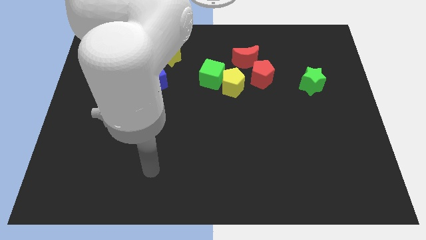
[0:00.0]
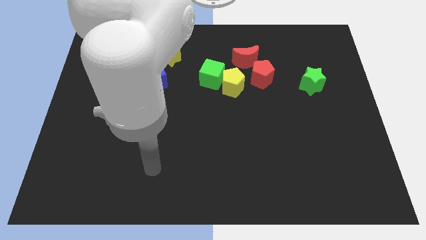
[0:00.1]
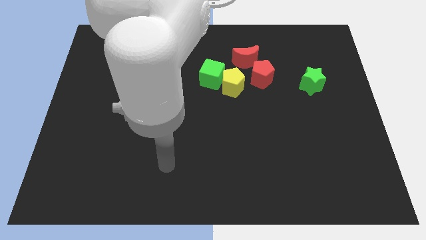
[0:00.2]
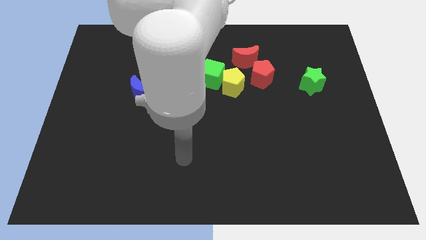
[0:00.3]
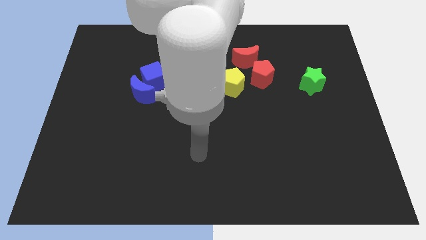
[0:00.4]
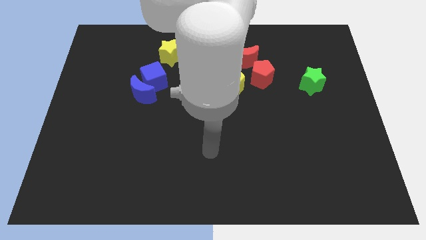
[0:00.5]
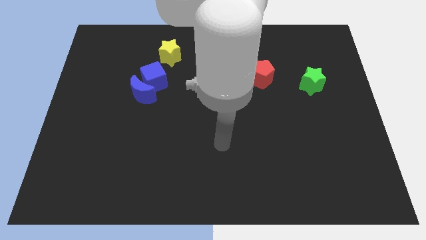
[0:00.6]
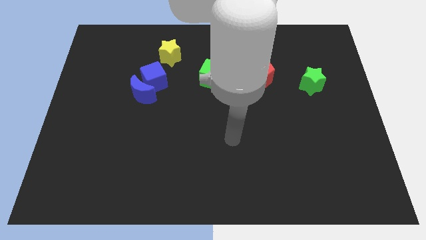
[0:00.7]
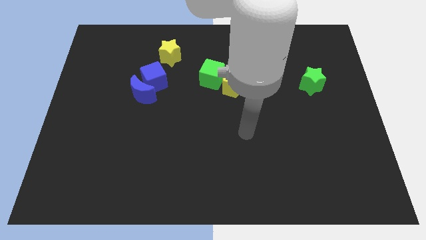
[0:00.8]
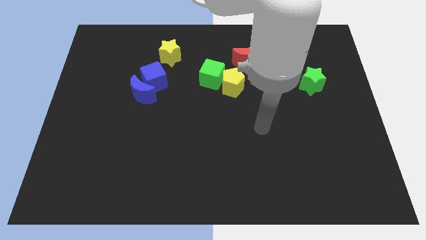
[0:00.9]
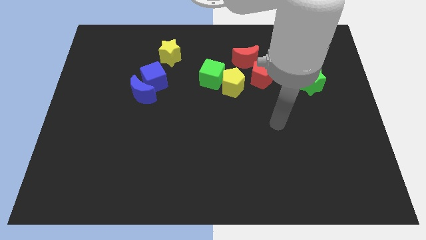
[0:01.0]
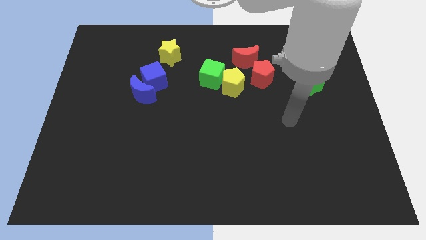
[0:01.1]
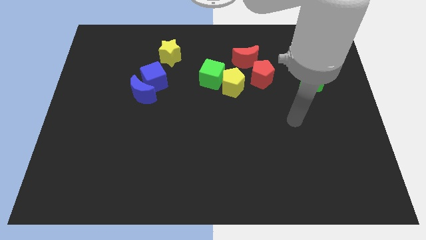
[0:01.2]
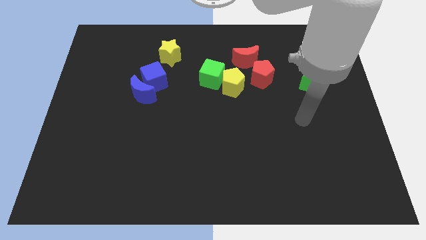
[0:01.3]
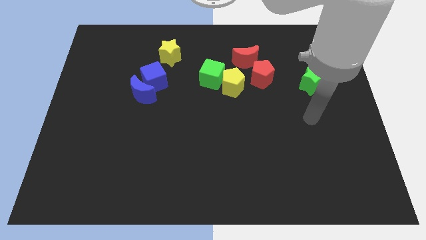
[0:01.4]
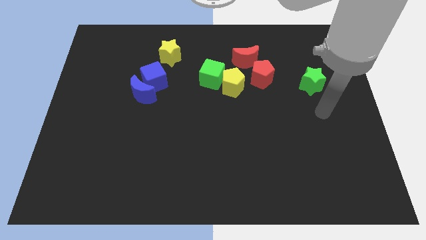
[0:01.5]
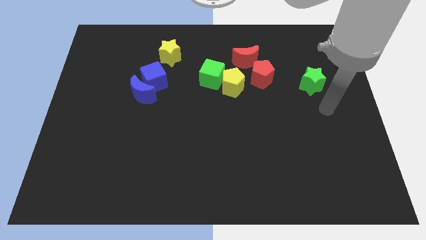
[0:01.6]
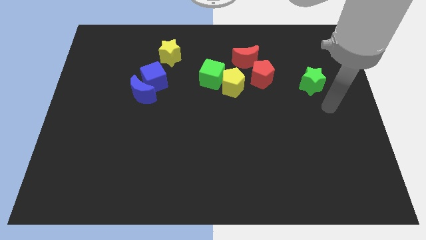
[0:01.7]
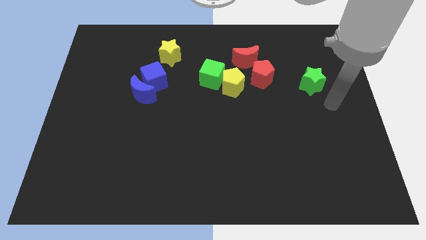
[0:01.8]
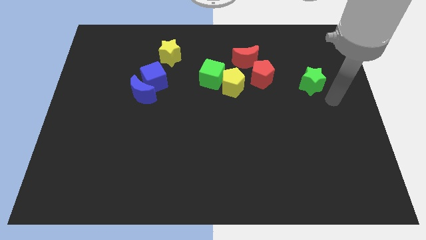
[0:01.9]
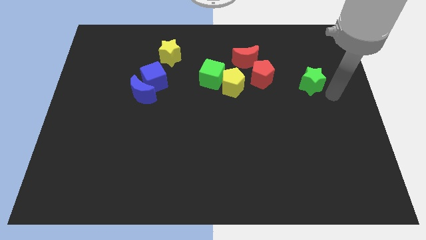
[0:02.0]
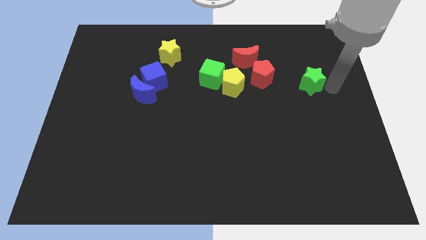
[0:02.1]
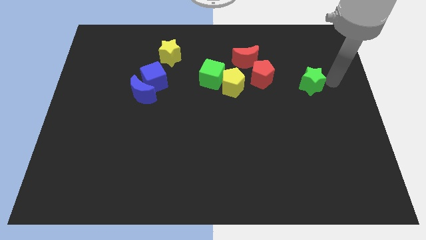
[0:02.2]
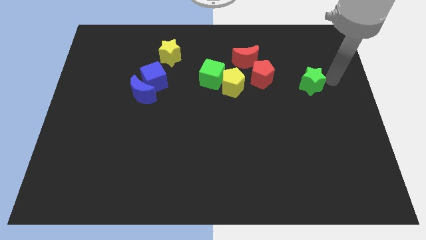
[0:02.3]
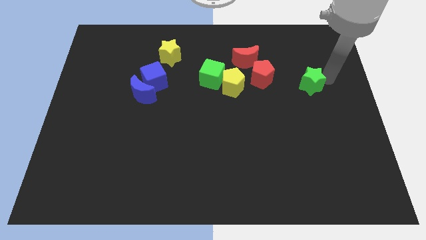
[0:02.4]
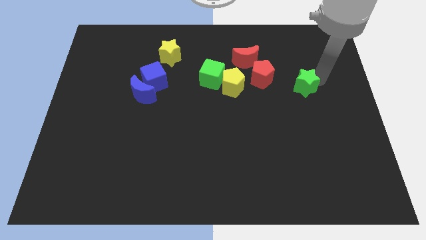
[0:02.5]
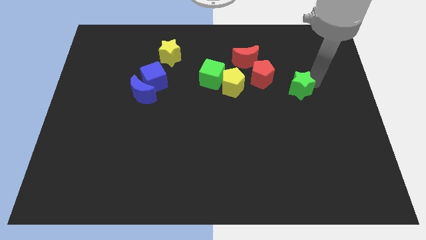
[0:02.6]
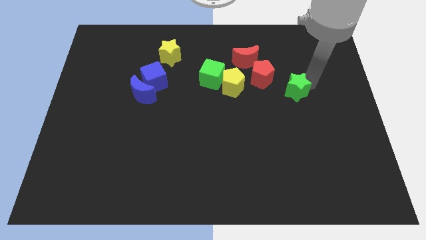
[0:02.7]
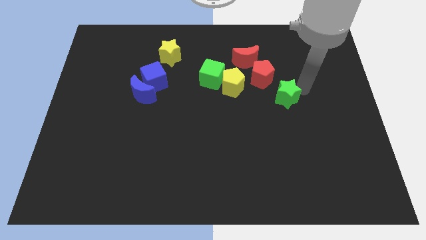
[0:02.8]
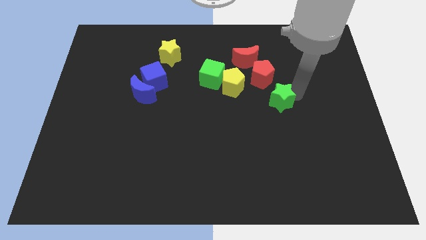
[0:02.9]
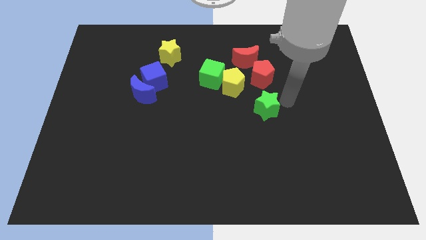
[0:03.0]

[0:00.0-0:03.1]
place the green star diagonally to the red pentagon

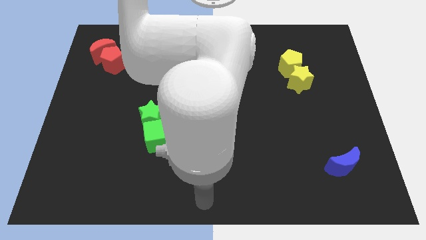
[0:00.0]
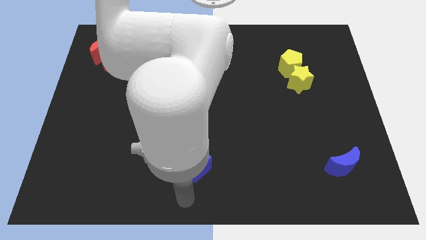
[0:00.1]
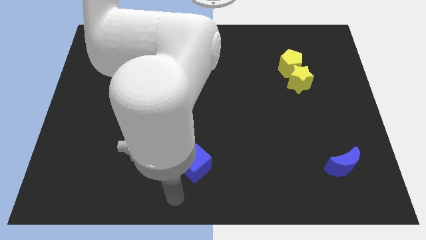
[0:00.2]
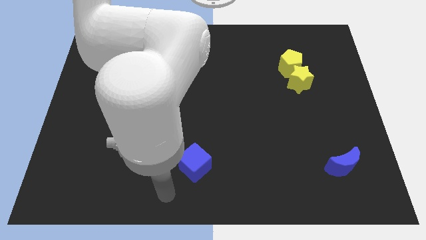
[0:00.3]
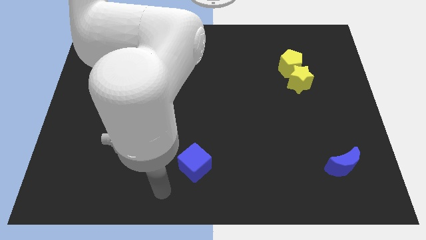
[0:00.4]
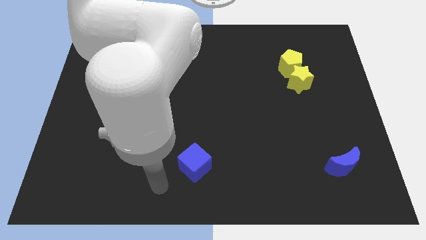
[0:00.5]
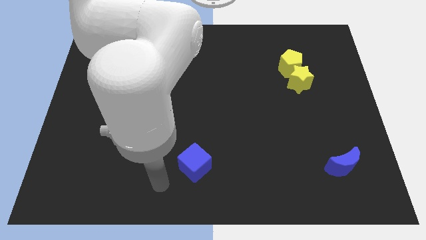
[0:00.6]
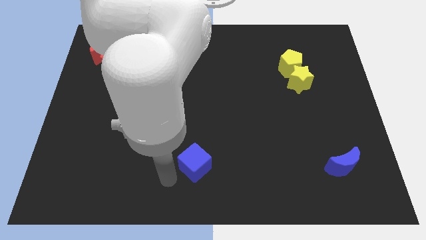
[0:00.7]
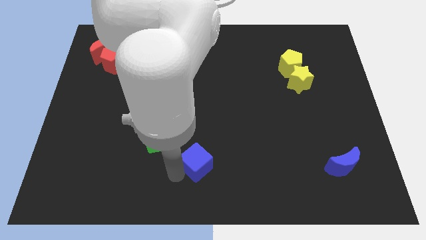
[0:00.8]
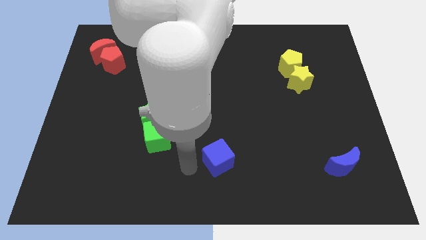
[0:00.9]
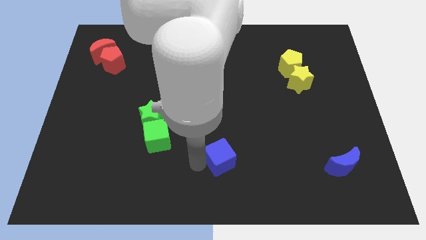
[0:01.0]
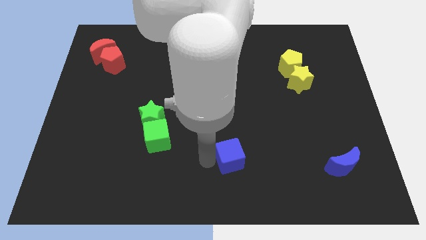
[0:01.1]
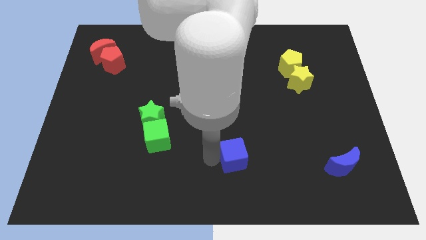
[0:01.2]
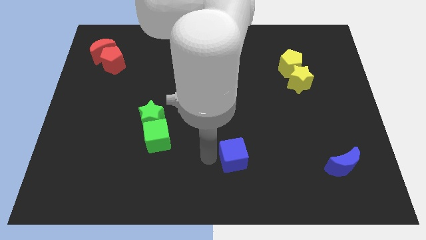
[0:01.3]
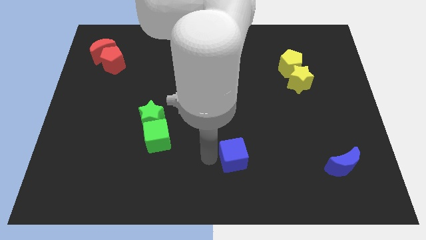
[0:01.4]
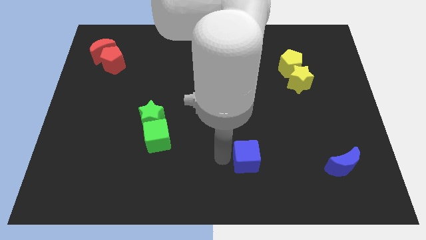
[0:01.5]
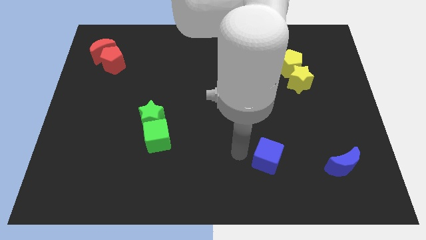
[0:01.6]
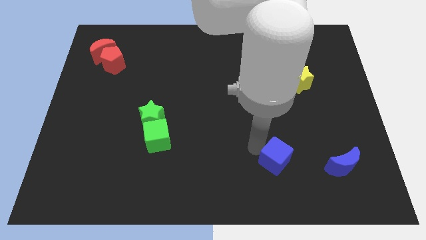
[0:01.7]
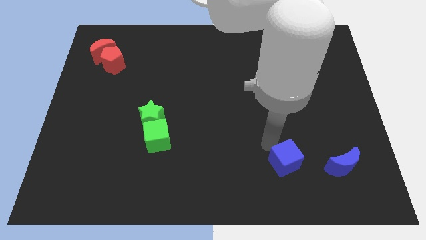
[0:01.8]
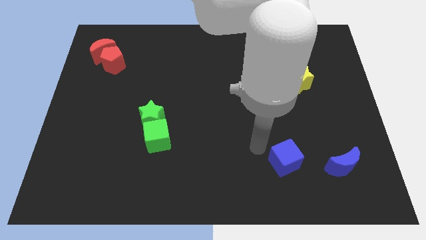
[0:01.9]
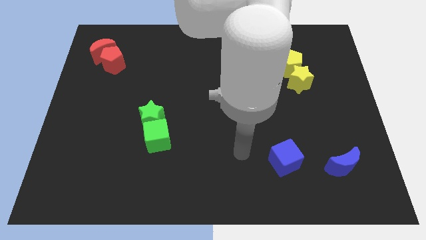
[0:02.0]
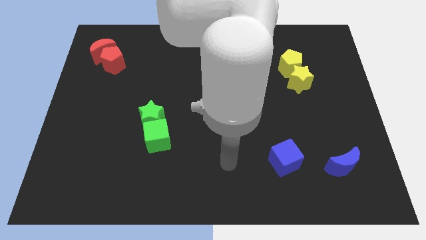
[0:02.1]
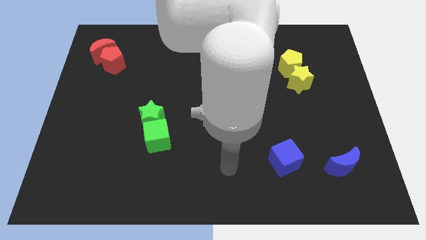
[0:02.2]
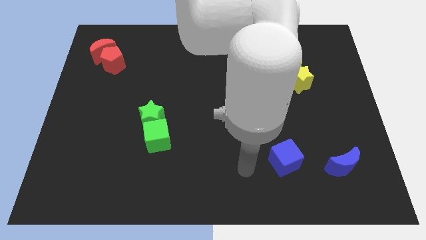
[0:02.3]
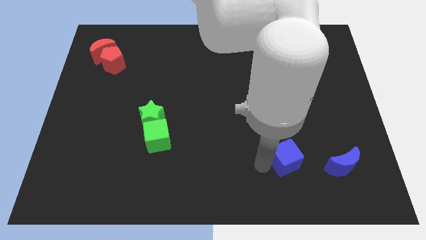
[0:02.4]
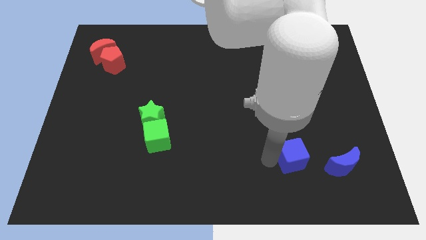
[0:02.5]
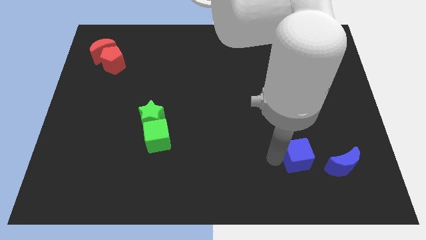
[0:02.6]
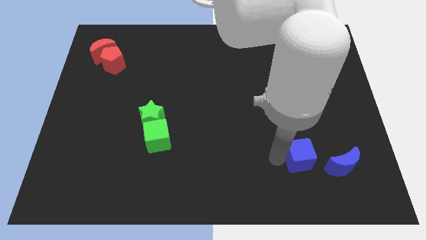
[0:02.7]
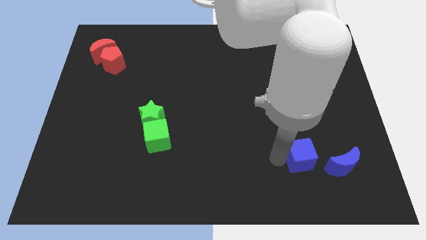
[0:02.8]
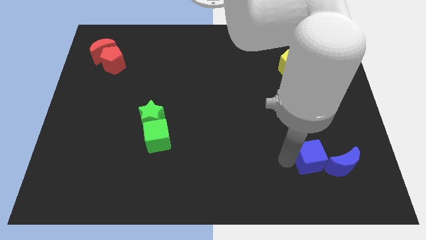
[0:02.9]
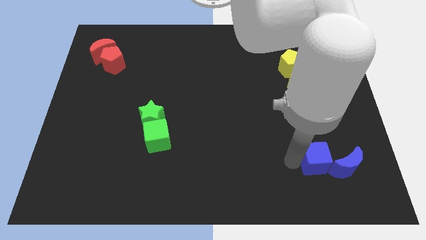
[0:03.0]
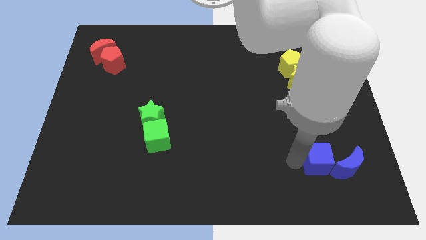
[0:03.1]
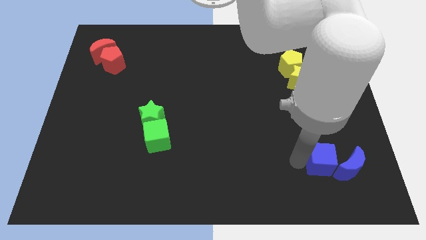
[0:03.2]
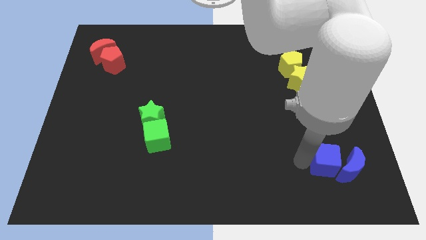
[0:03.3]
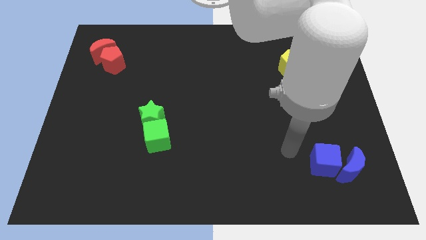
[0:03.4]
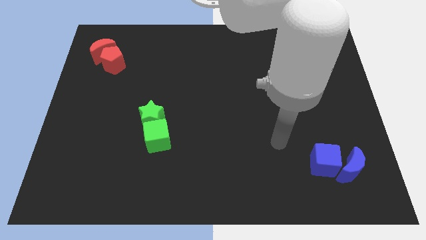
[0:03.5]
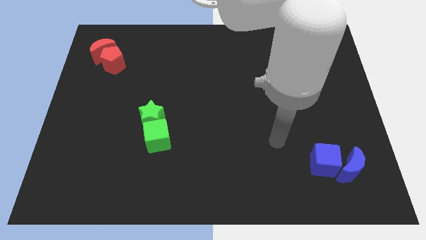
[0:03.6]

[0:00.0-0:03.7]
move blue cube into the blue crescent

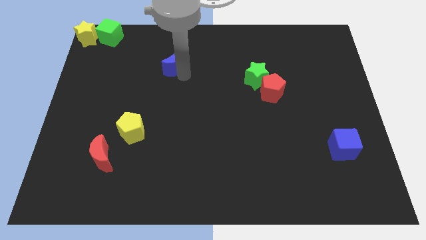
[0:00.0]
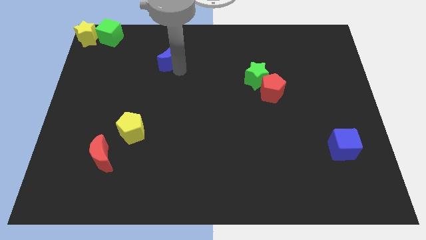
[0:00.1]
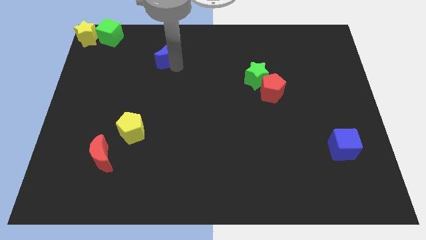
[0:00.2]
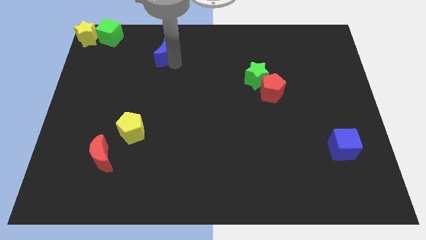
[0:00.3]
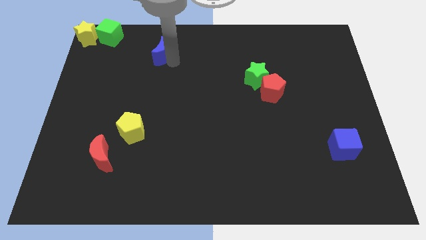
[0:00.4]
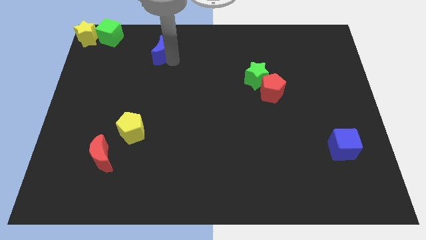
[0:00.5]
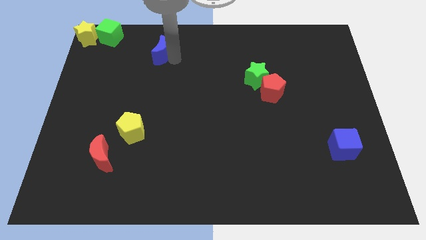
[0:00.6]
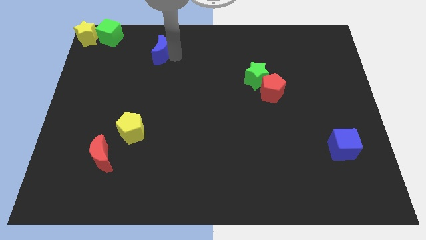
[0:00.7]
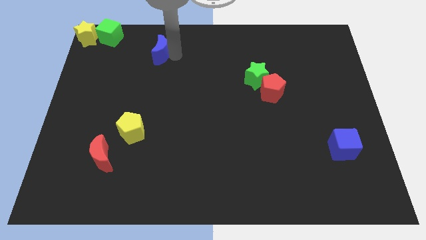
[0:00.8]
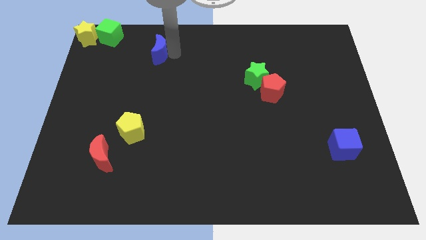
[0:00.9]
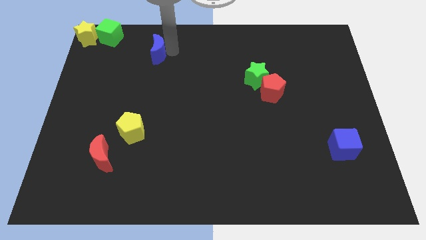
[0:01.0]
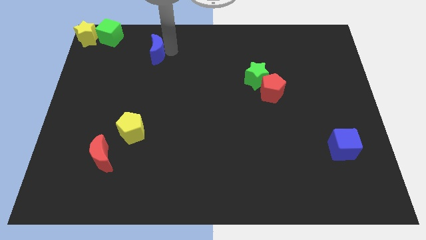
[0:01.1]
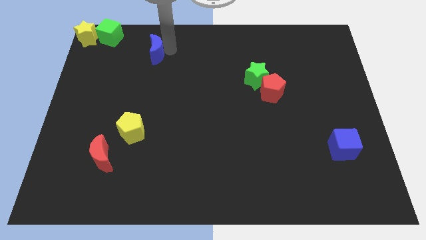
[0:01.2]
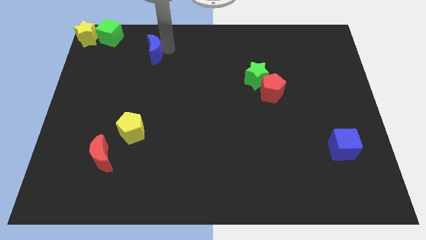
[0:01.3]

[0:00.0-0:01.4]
move the blue crescent towards the green cube

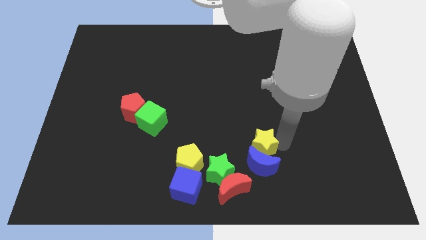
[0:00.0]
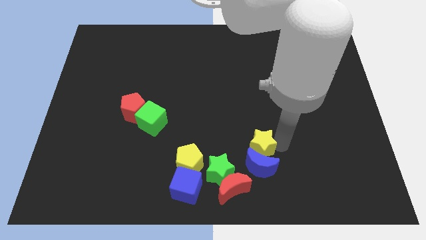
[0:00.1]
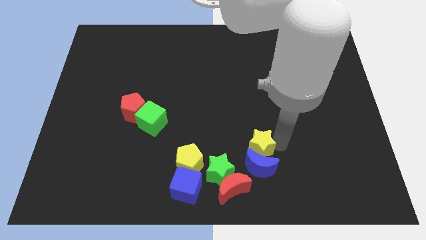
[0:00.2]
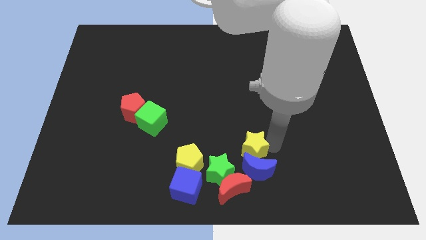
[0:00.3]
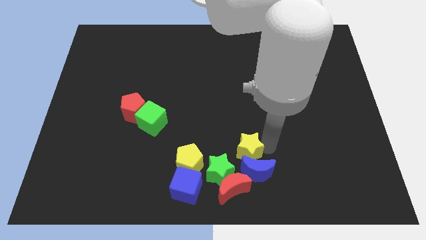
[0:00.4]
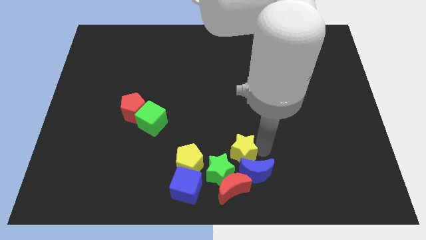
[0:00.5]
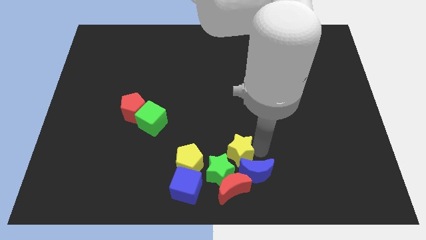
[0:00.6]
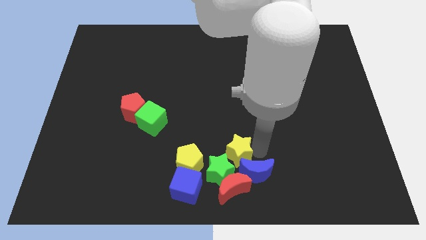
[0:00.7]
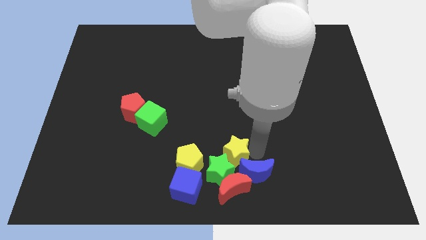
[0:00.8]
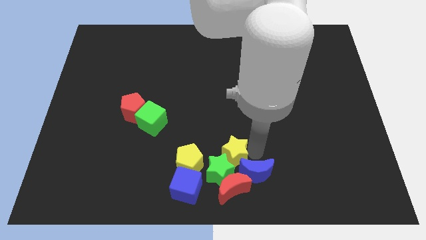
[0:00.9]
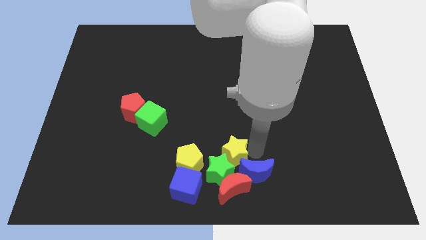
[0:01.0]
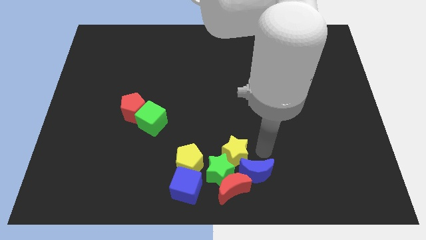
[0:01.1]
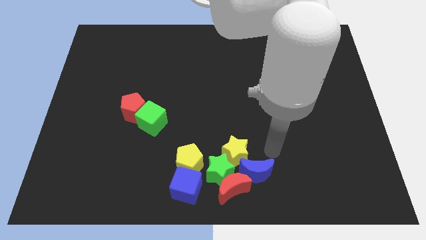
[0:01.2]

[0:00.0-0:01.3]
push the yellow star into the green star
